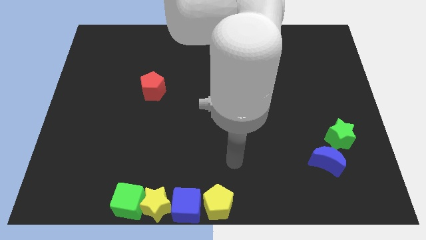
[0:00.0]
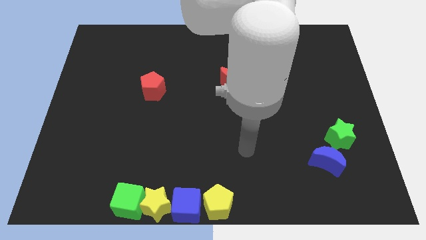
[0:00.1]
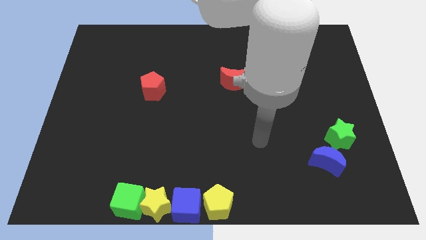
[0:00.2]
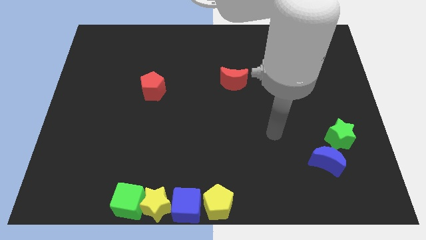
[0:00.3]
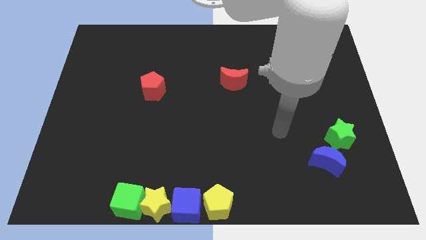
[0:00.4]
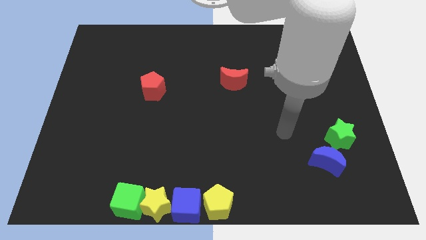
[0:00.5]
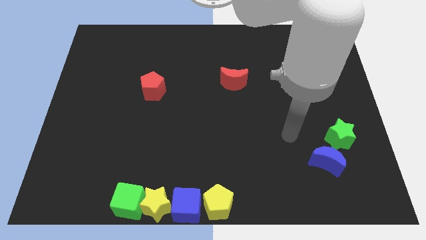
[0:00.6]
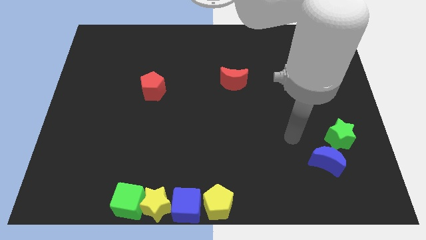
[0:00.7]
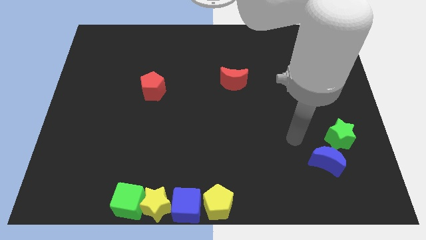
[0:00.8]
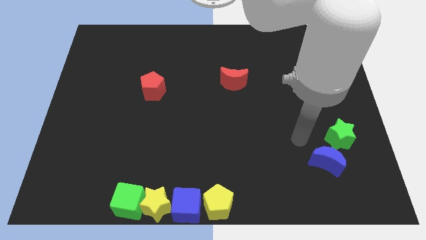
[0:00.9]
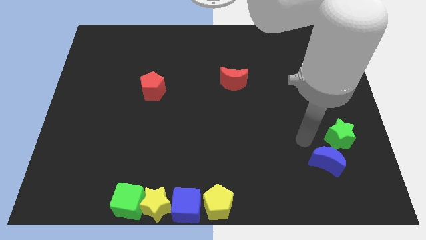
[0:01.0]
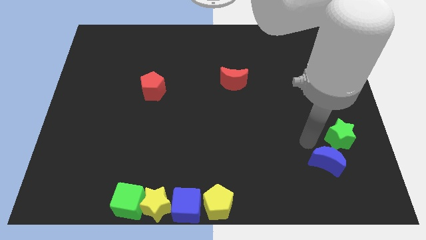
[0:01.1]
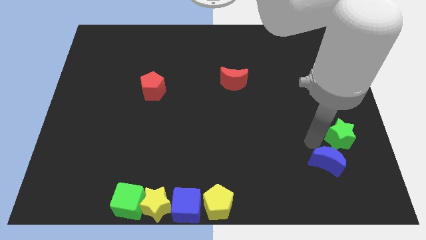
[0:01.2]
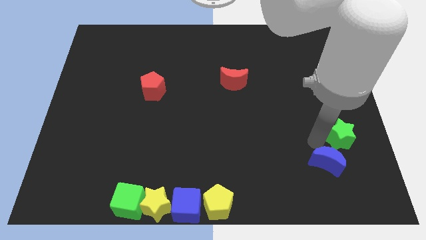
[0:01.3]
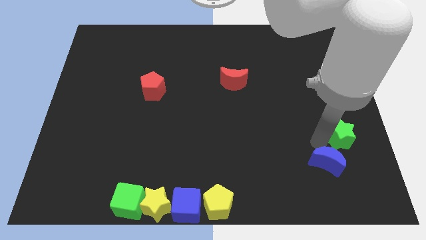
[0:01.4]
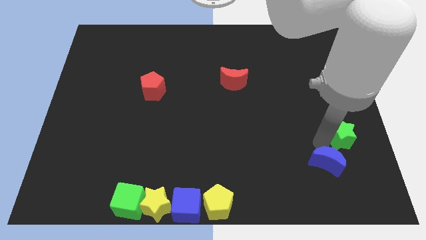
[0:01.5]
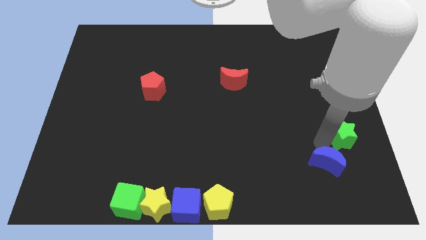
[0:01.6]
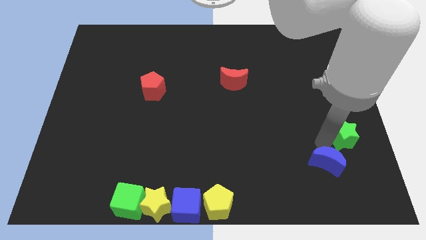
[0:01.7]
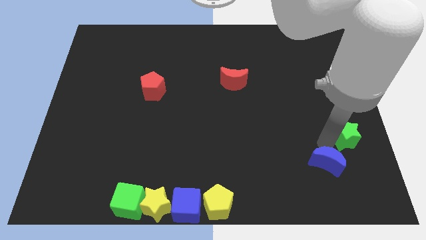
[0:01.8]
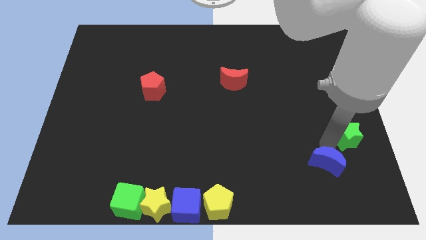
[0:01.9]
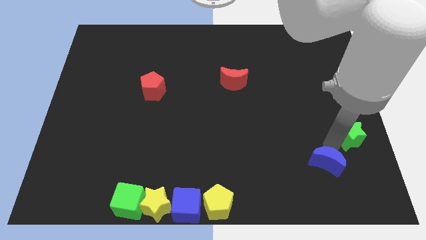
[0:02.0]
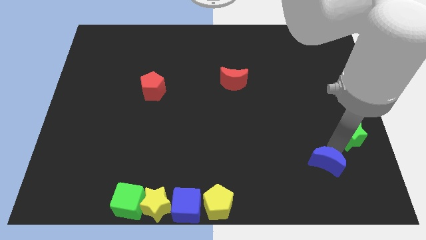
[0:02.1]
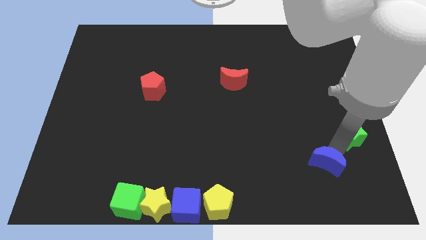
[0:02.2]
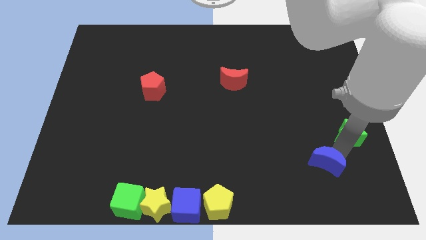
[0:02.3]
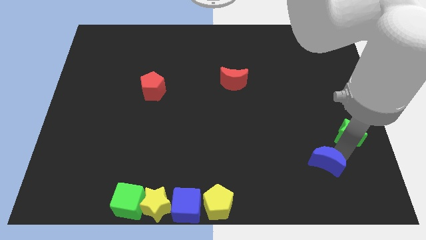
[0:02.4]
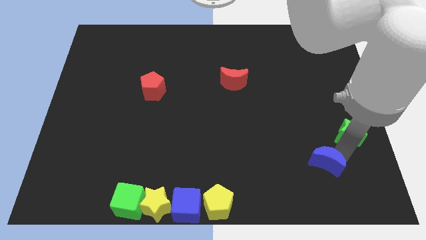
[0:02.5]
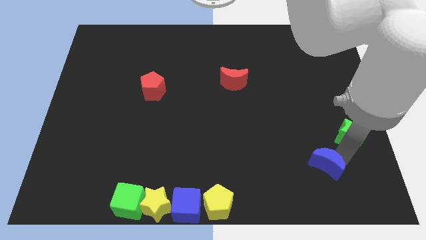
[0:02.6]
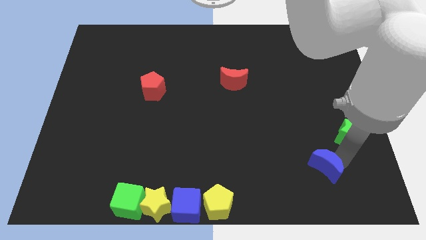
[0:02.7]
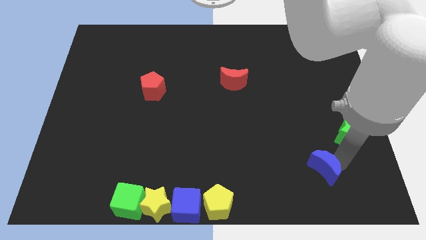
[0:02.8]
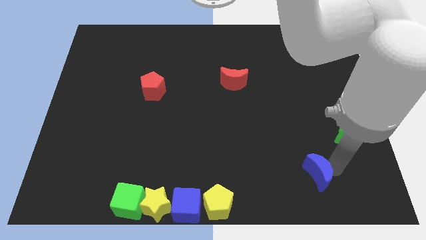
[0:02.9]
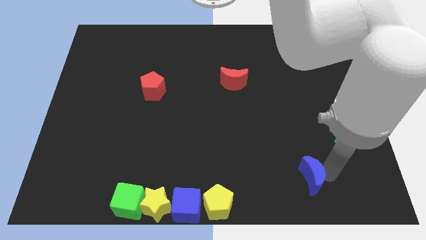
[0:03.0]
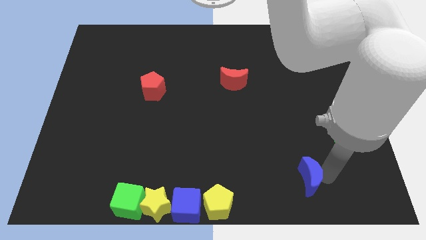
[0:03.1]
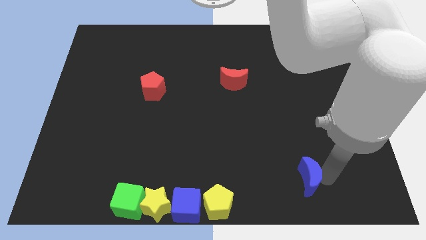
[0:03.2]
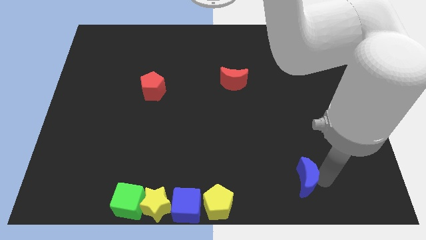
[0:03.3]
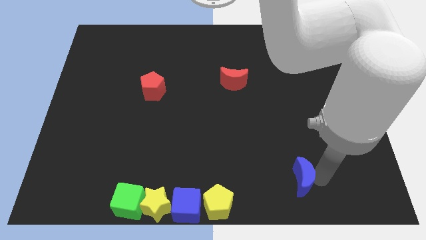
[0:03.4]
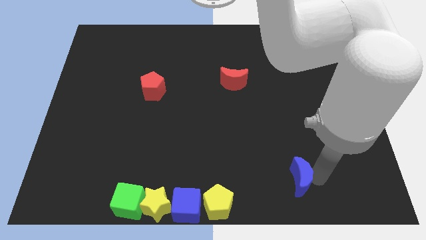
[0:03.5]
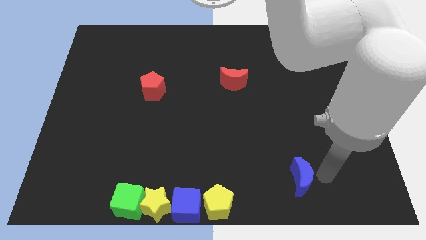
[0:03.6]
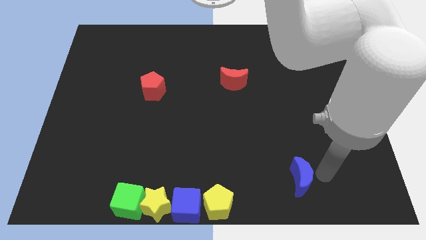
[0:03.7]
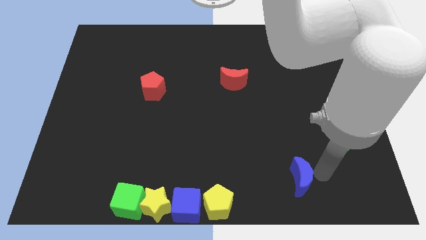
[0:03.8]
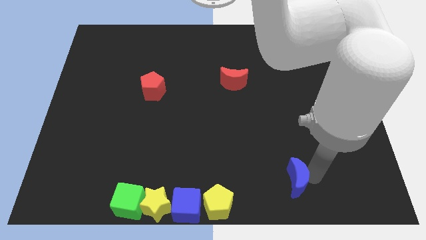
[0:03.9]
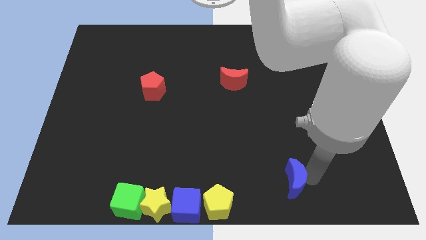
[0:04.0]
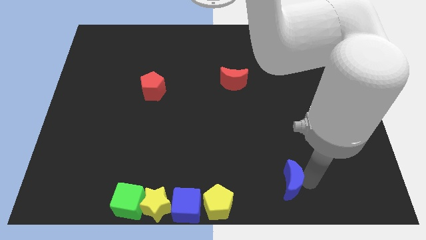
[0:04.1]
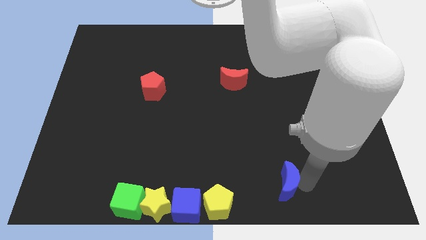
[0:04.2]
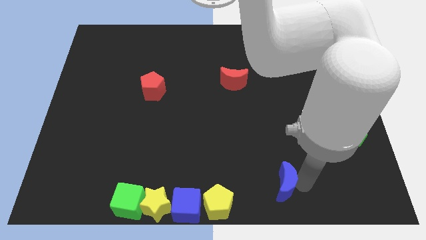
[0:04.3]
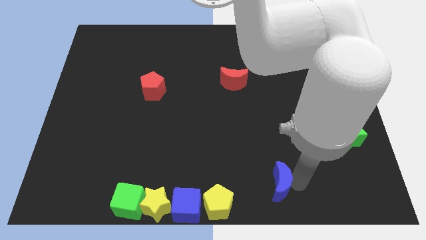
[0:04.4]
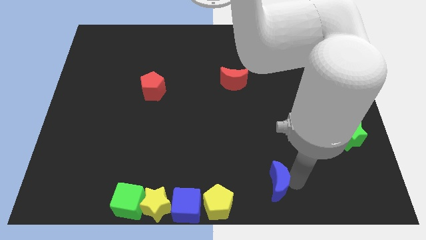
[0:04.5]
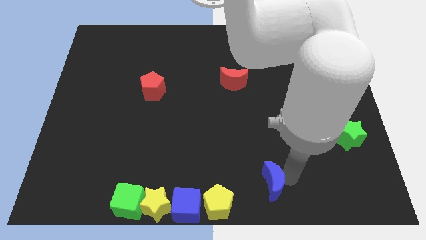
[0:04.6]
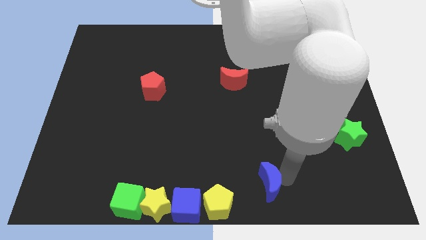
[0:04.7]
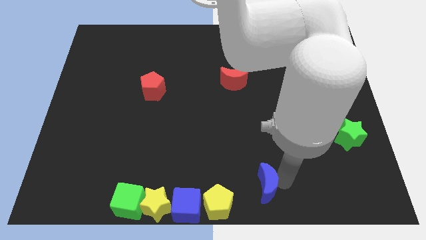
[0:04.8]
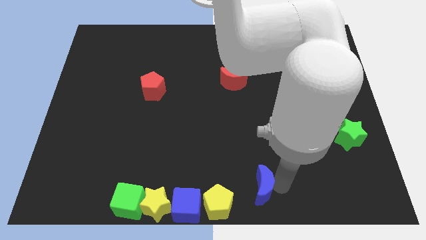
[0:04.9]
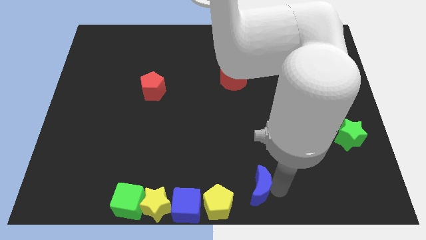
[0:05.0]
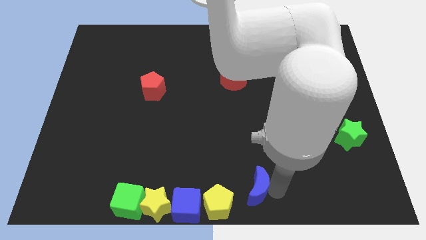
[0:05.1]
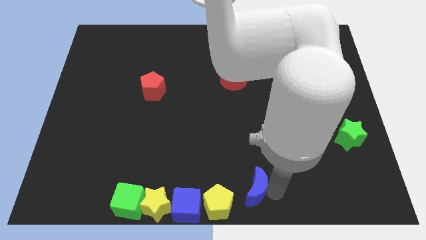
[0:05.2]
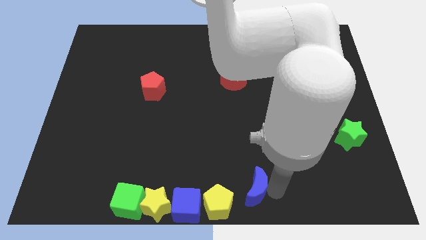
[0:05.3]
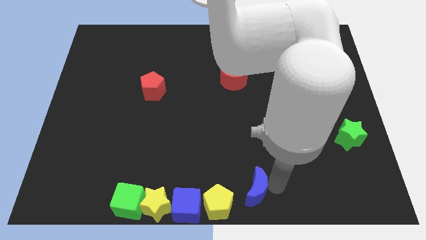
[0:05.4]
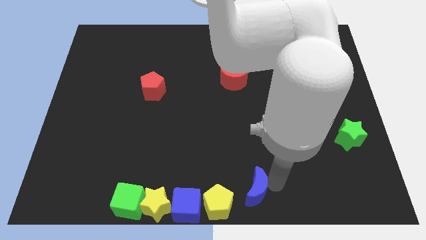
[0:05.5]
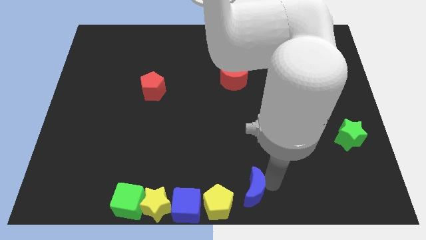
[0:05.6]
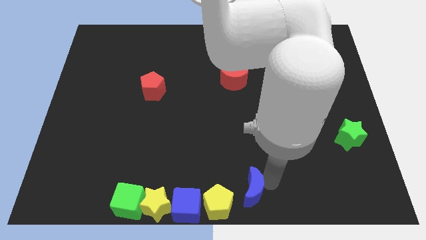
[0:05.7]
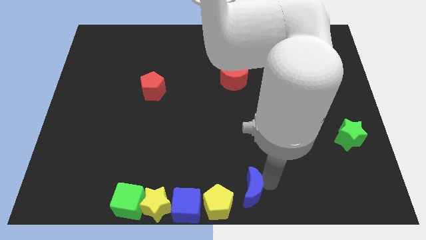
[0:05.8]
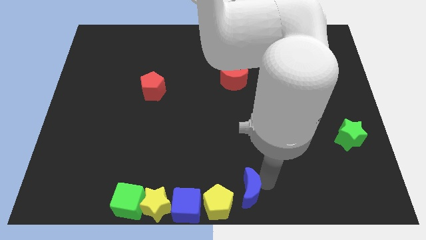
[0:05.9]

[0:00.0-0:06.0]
push the blue moon downward

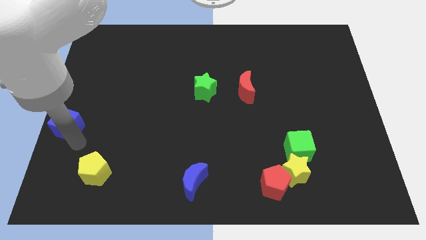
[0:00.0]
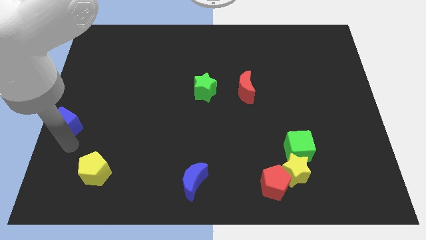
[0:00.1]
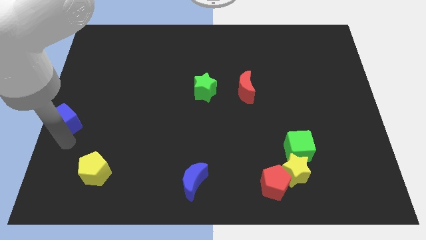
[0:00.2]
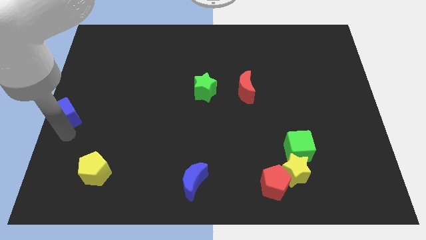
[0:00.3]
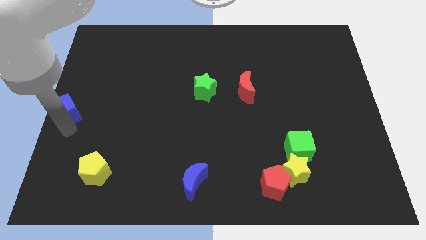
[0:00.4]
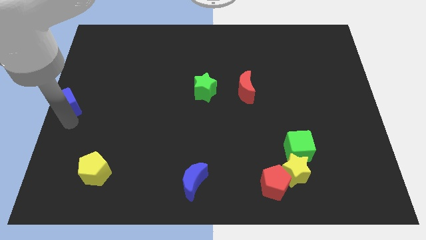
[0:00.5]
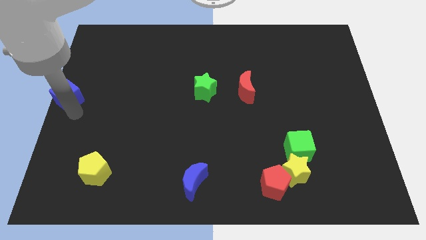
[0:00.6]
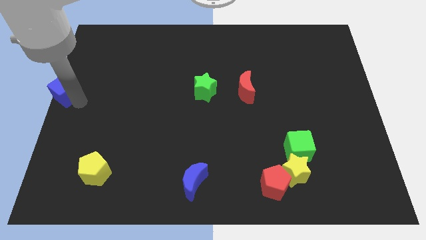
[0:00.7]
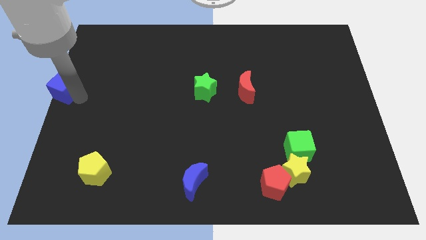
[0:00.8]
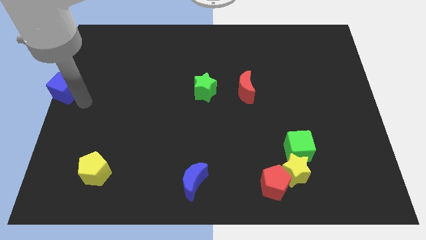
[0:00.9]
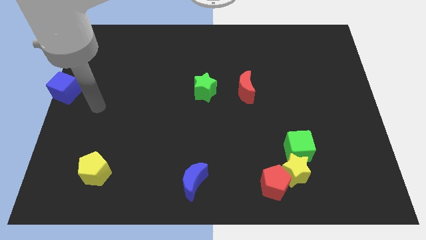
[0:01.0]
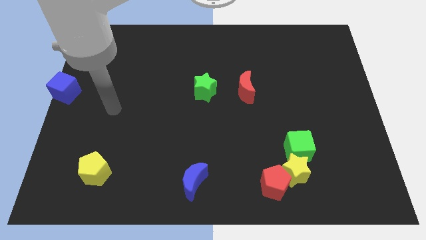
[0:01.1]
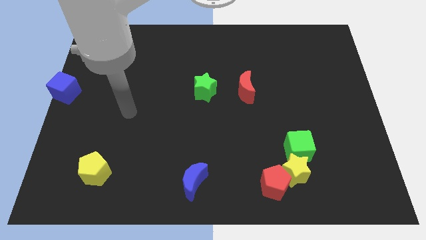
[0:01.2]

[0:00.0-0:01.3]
move blue cube slightly upwards

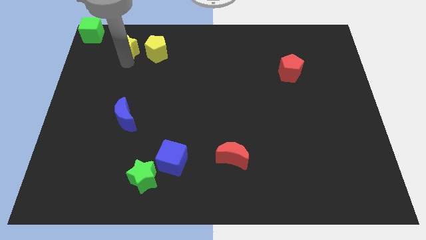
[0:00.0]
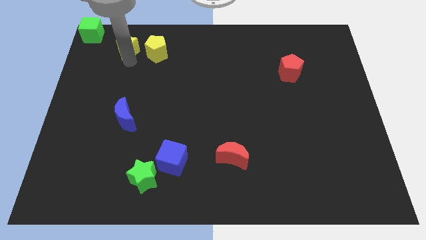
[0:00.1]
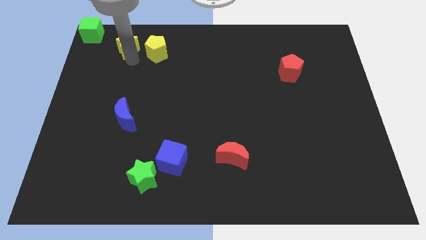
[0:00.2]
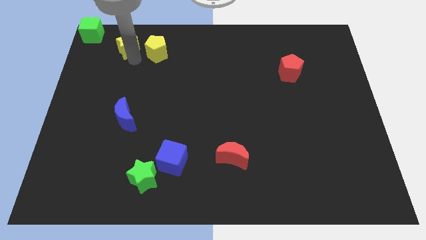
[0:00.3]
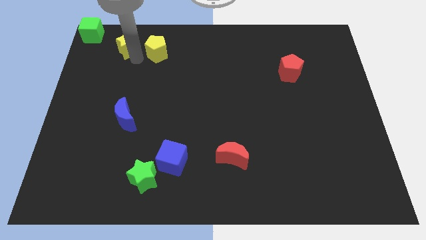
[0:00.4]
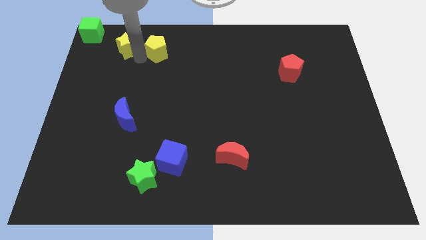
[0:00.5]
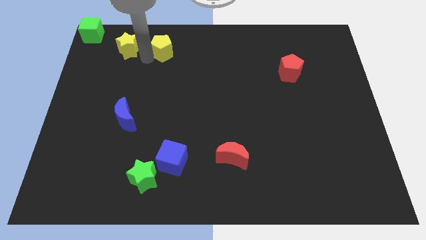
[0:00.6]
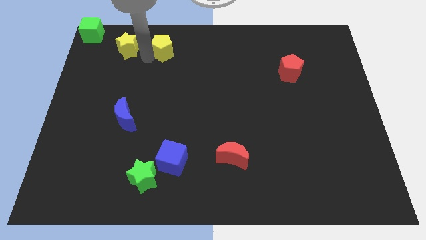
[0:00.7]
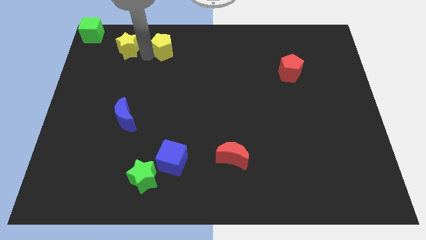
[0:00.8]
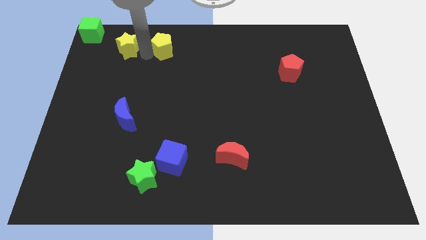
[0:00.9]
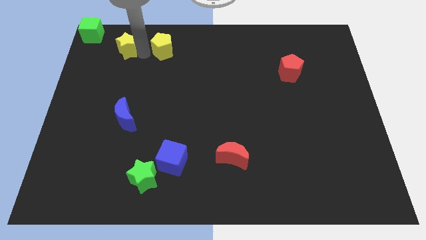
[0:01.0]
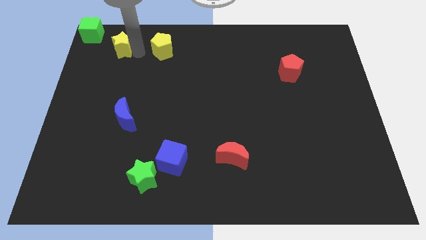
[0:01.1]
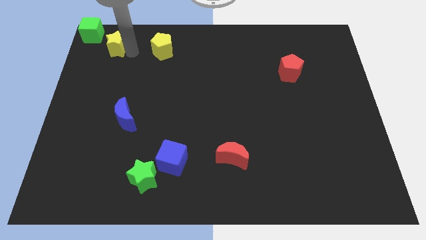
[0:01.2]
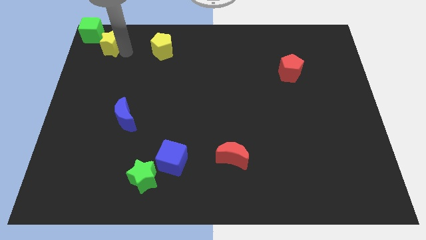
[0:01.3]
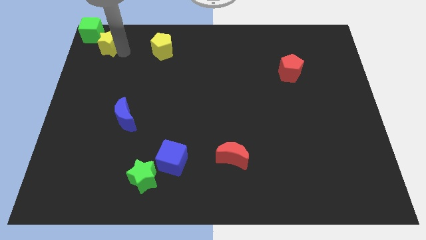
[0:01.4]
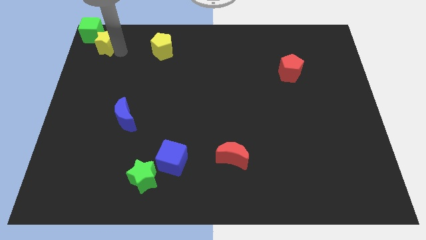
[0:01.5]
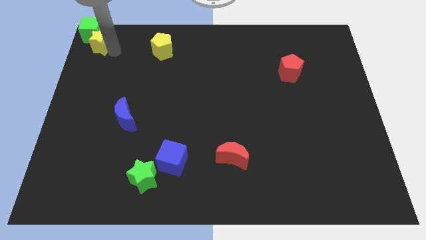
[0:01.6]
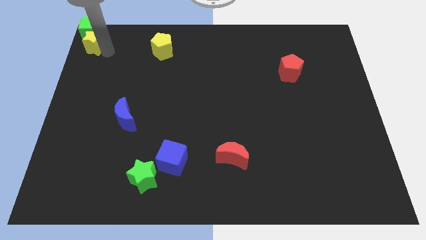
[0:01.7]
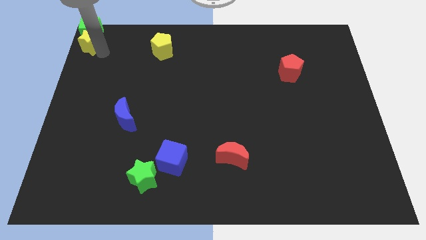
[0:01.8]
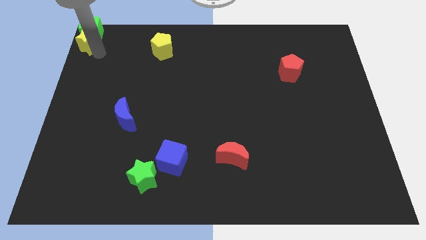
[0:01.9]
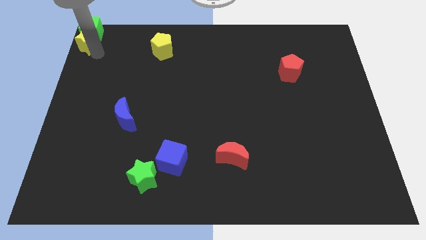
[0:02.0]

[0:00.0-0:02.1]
push the yellow star into green cube
